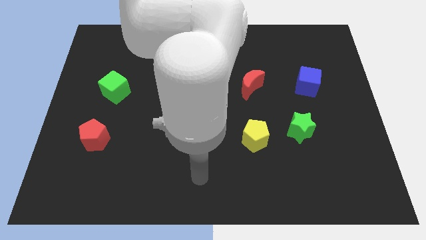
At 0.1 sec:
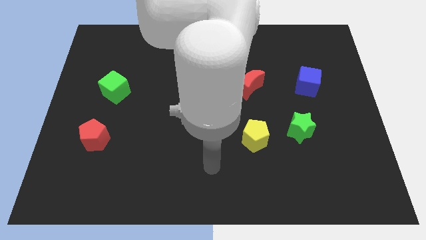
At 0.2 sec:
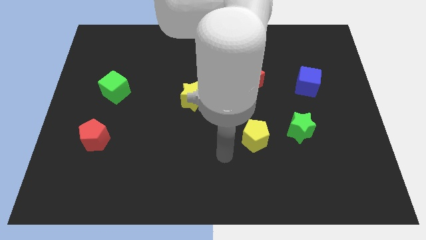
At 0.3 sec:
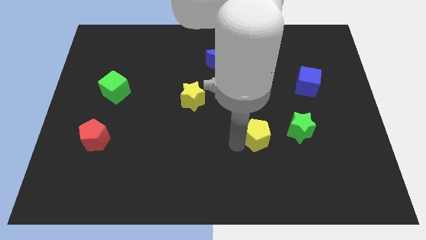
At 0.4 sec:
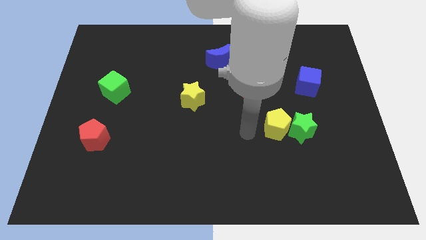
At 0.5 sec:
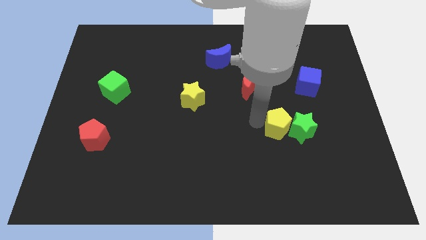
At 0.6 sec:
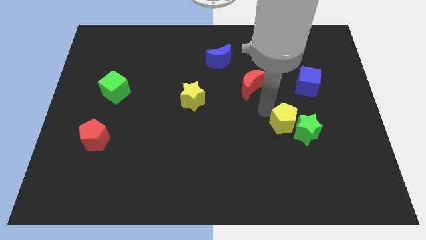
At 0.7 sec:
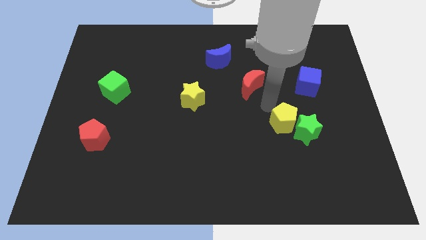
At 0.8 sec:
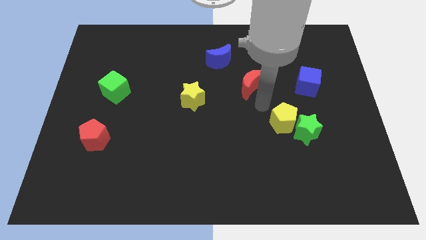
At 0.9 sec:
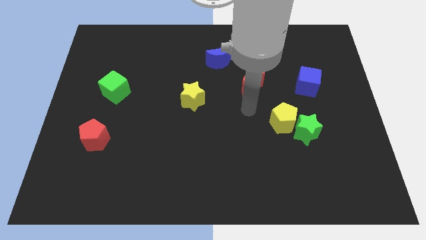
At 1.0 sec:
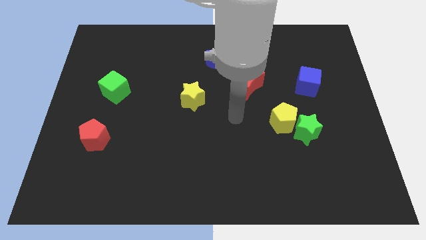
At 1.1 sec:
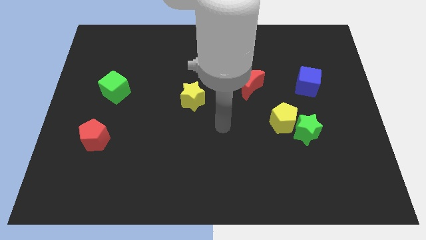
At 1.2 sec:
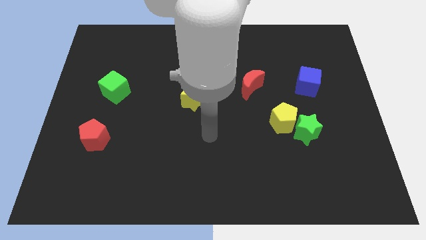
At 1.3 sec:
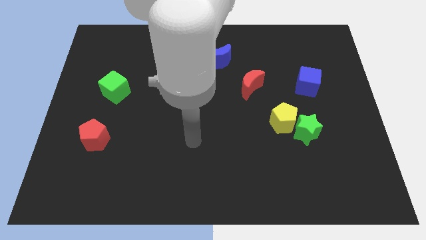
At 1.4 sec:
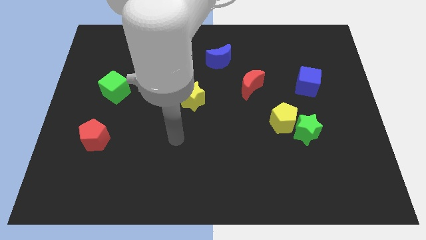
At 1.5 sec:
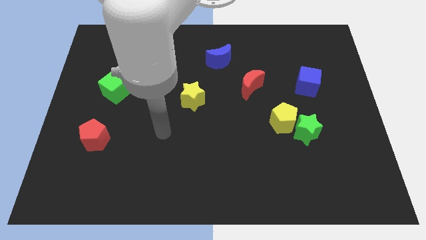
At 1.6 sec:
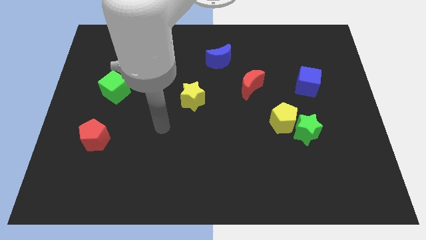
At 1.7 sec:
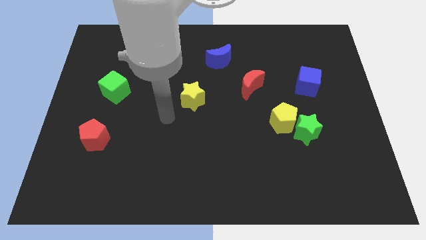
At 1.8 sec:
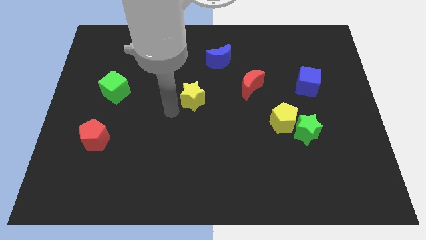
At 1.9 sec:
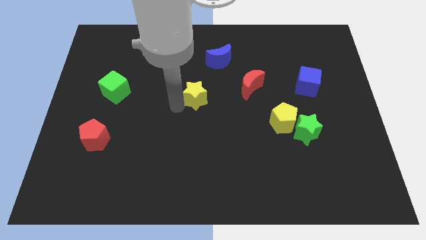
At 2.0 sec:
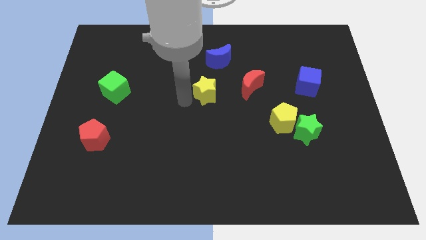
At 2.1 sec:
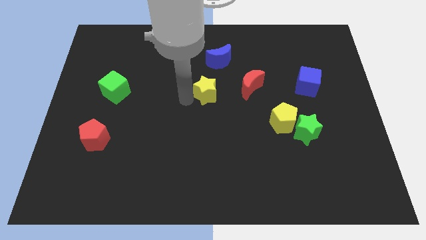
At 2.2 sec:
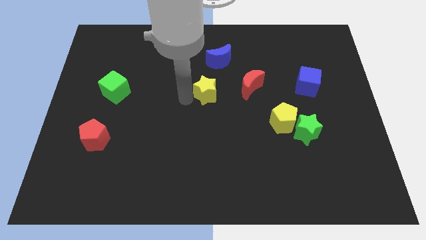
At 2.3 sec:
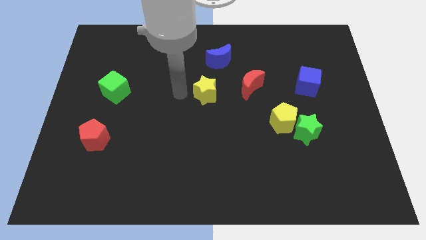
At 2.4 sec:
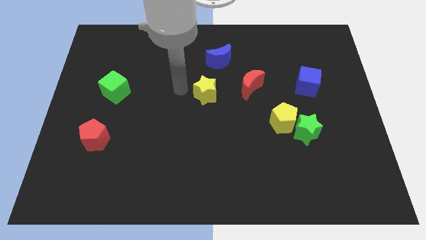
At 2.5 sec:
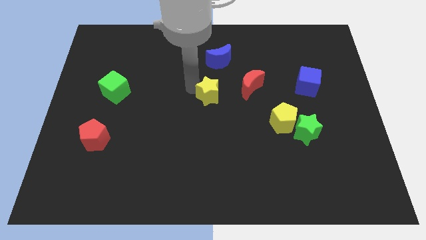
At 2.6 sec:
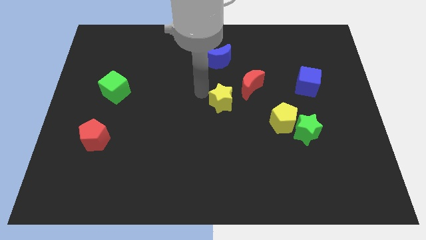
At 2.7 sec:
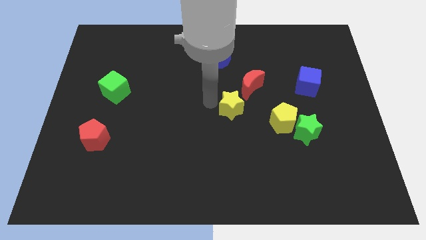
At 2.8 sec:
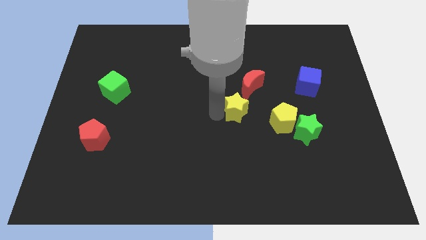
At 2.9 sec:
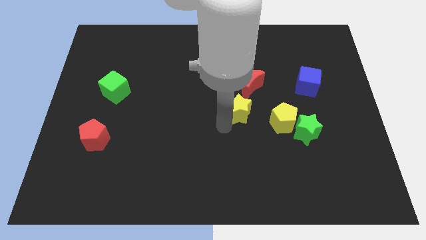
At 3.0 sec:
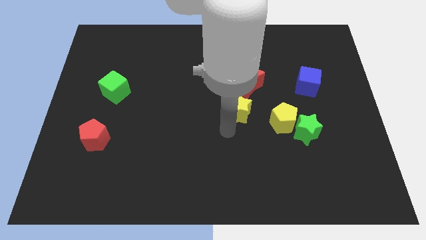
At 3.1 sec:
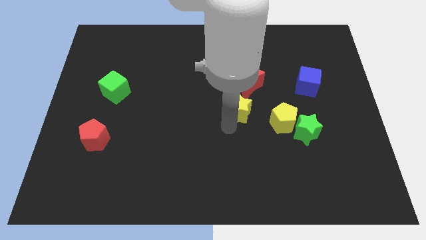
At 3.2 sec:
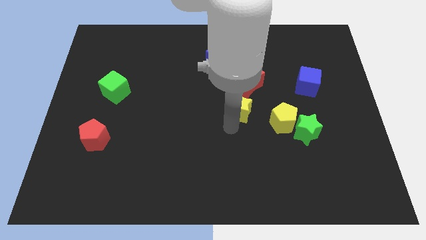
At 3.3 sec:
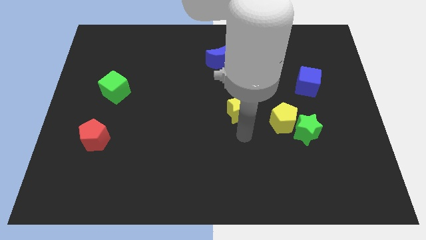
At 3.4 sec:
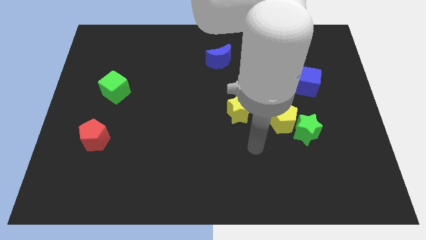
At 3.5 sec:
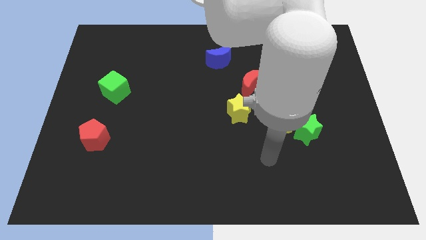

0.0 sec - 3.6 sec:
move the yellow star diagonal top left to yellow pentagon

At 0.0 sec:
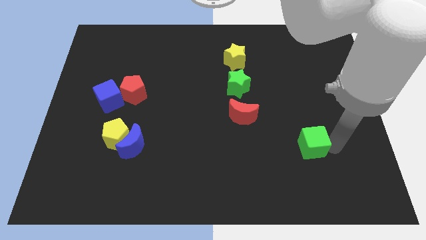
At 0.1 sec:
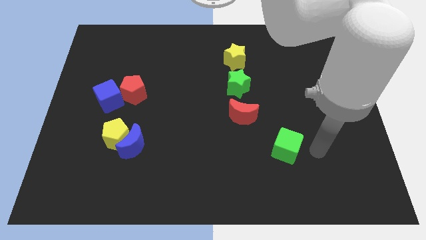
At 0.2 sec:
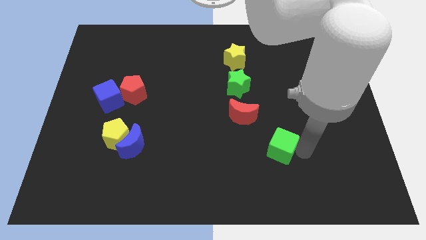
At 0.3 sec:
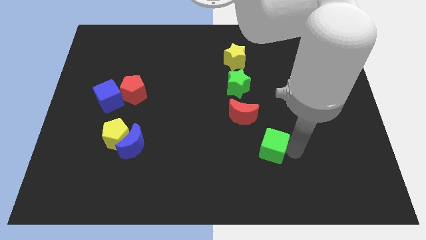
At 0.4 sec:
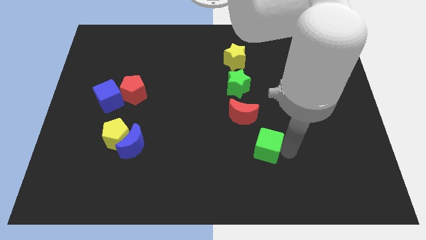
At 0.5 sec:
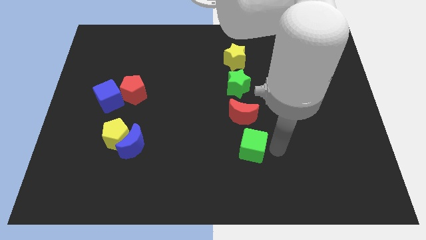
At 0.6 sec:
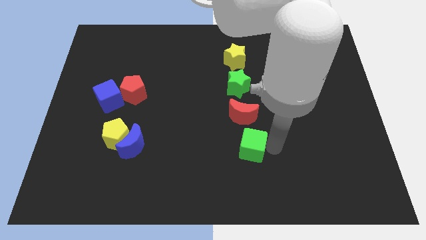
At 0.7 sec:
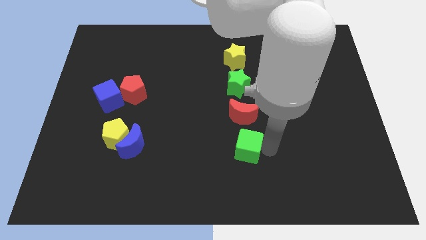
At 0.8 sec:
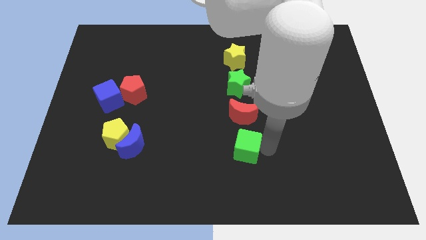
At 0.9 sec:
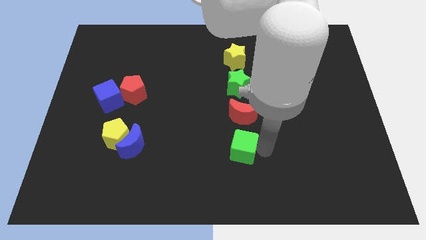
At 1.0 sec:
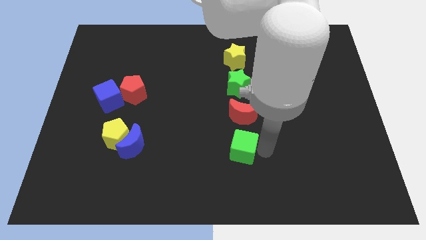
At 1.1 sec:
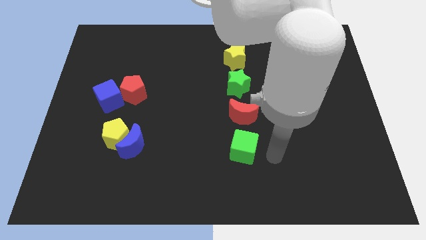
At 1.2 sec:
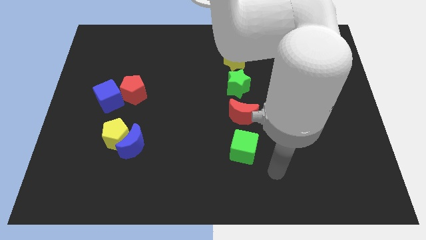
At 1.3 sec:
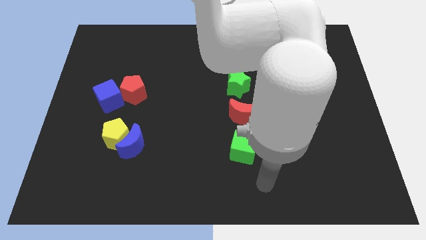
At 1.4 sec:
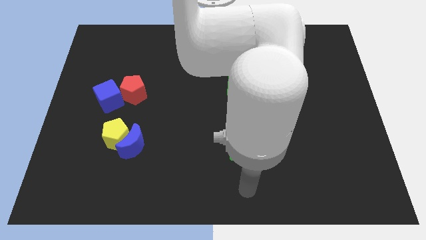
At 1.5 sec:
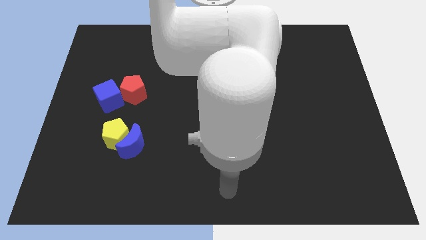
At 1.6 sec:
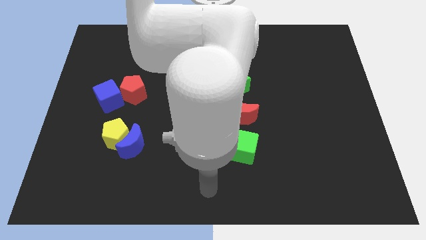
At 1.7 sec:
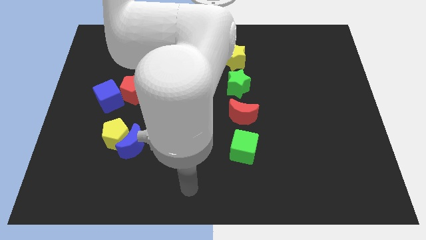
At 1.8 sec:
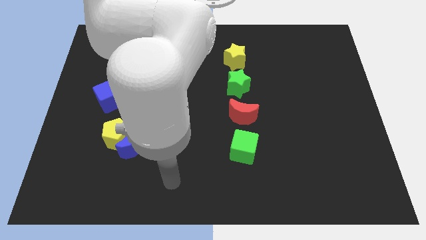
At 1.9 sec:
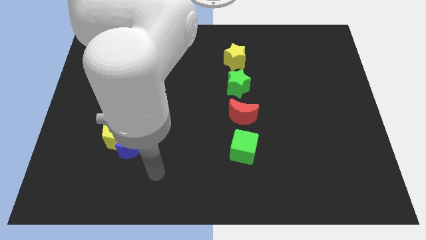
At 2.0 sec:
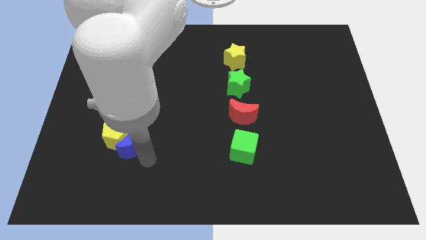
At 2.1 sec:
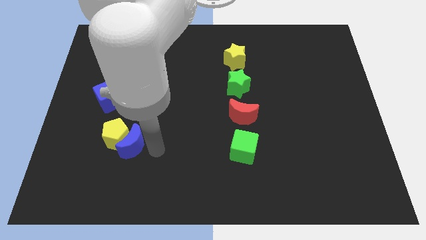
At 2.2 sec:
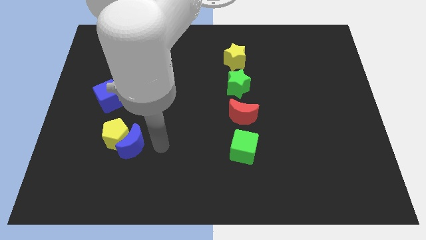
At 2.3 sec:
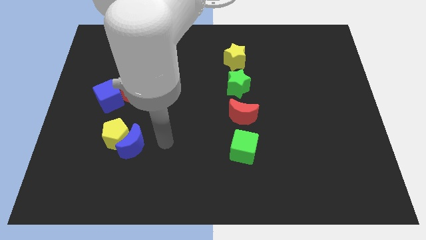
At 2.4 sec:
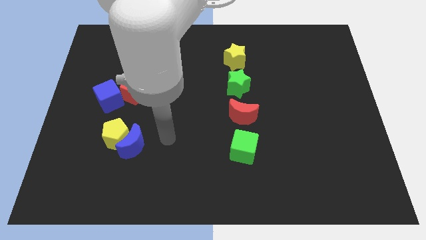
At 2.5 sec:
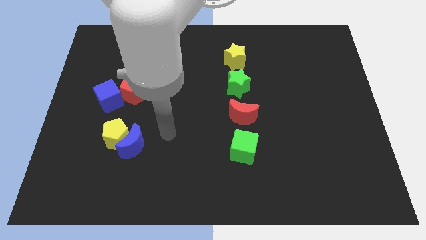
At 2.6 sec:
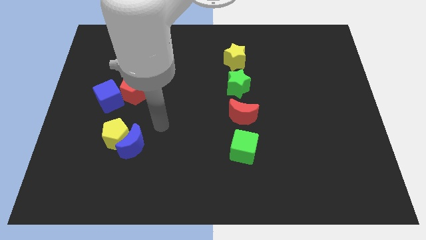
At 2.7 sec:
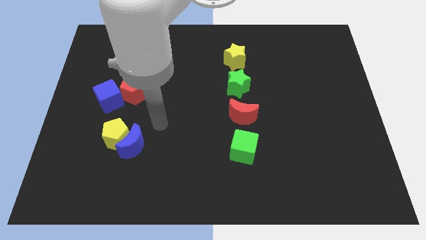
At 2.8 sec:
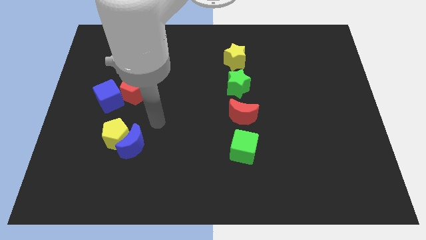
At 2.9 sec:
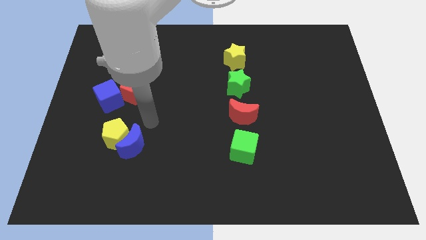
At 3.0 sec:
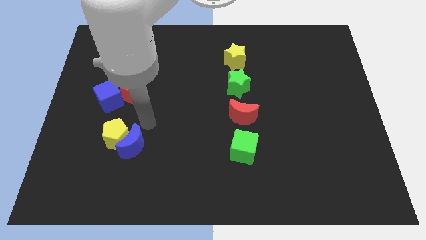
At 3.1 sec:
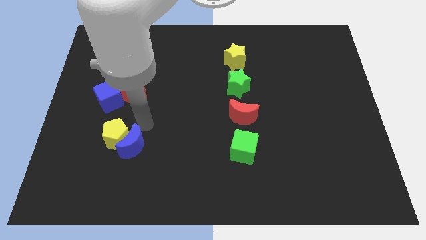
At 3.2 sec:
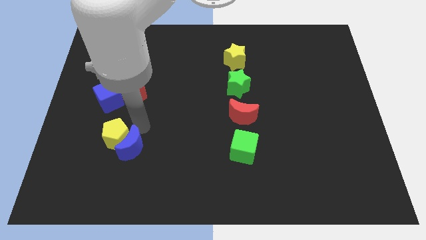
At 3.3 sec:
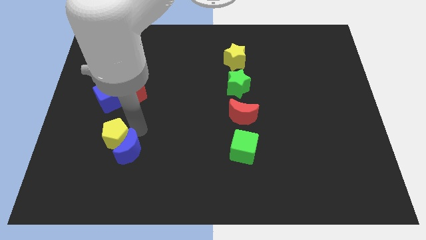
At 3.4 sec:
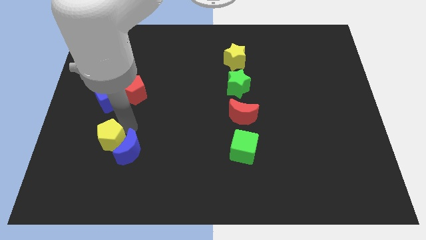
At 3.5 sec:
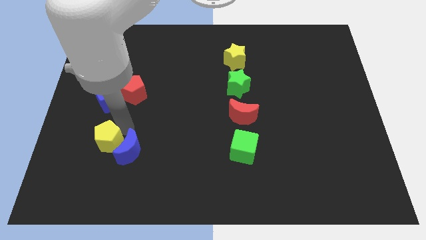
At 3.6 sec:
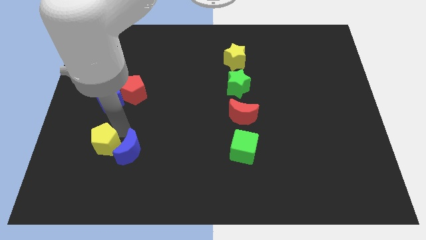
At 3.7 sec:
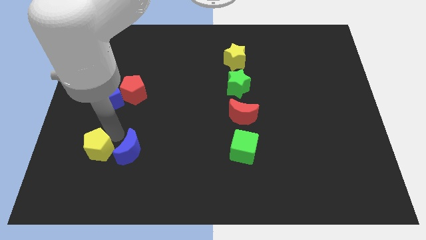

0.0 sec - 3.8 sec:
push the green cube and place it below red moon

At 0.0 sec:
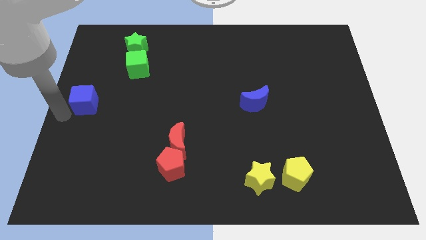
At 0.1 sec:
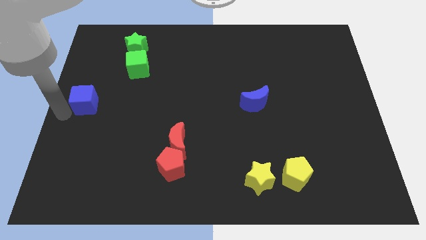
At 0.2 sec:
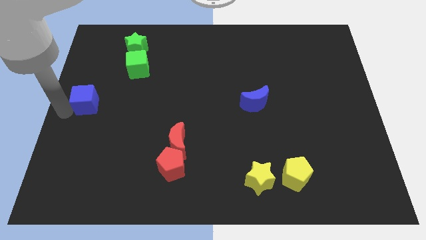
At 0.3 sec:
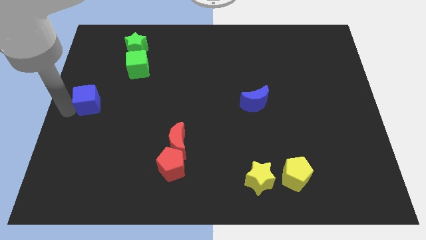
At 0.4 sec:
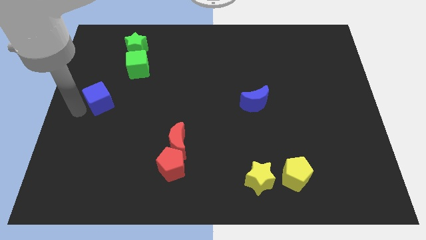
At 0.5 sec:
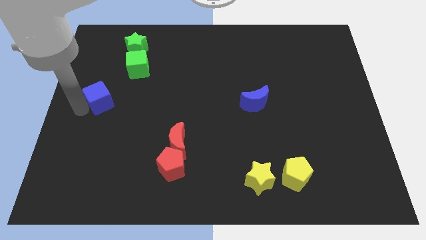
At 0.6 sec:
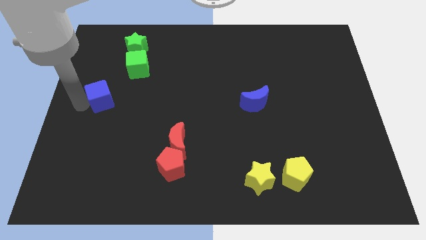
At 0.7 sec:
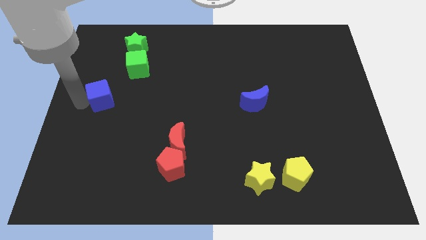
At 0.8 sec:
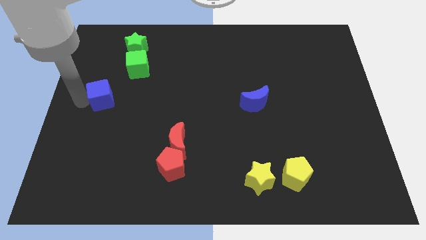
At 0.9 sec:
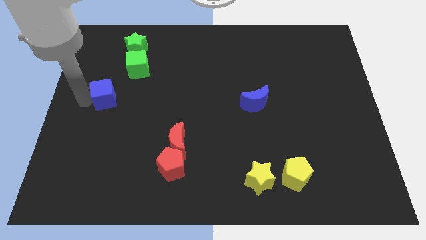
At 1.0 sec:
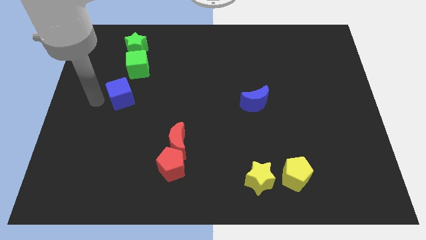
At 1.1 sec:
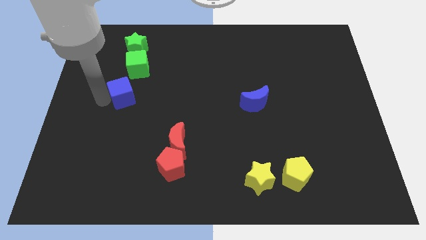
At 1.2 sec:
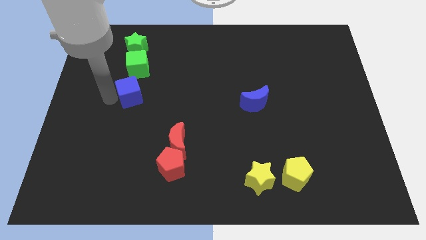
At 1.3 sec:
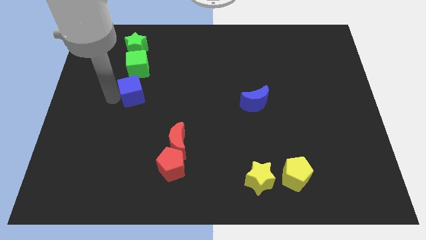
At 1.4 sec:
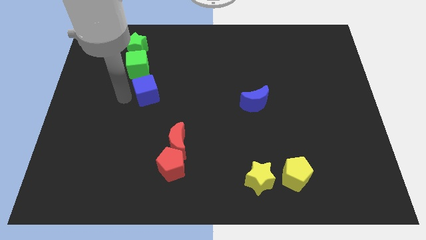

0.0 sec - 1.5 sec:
place the blue cube below the green cube
